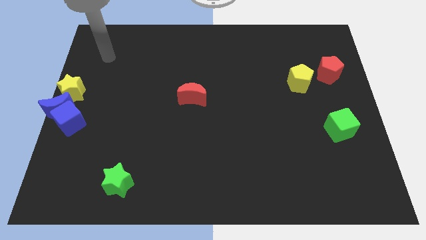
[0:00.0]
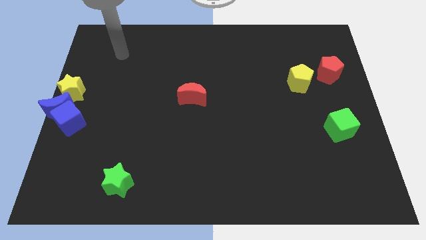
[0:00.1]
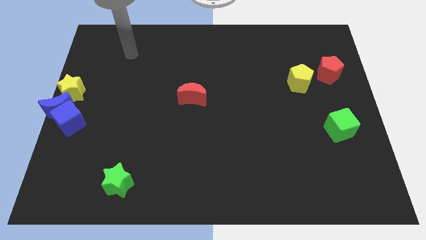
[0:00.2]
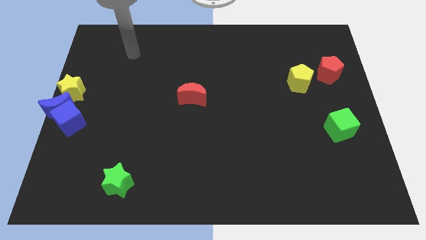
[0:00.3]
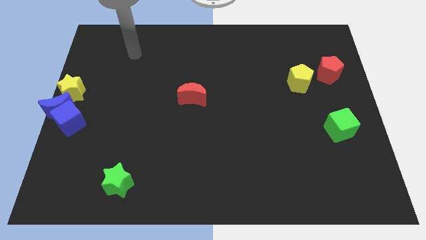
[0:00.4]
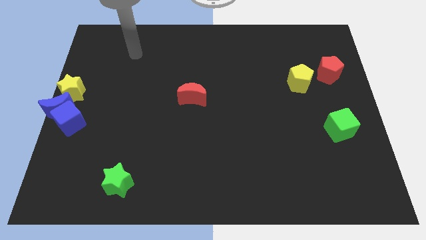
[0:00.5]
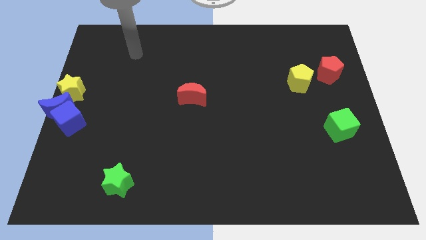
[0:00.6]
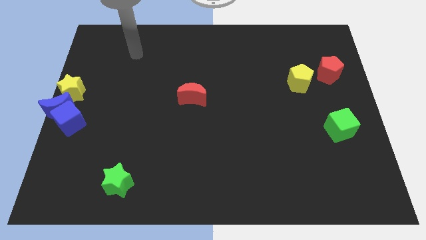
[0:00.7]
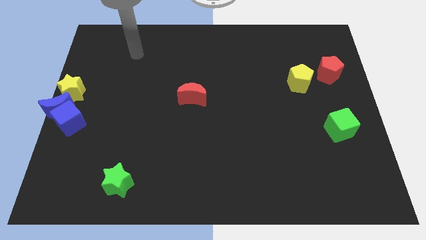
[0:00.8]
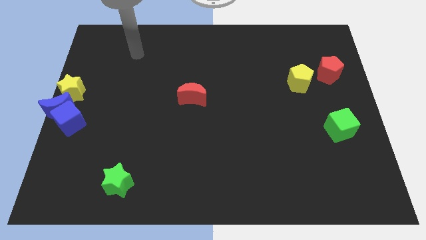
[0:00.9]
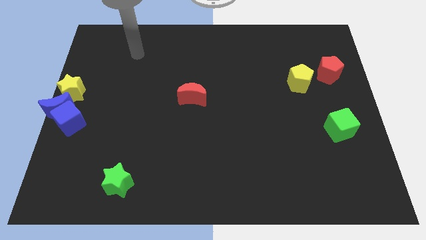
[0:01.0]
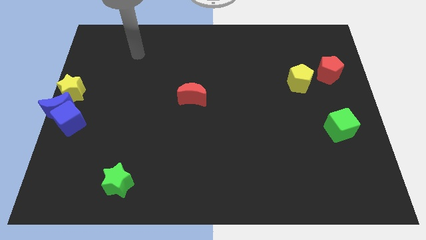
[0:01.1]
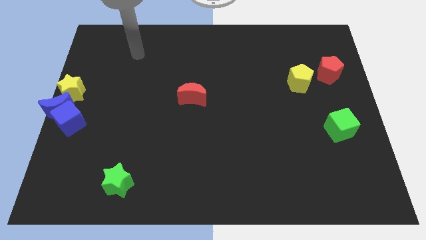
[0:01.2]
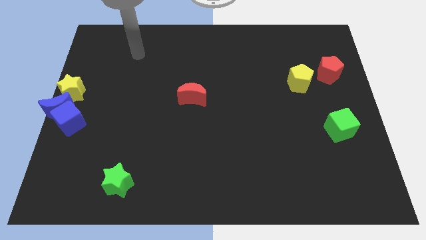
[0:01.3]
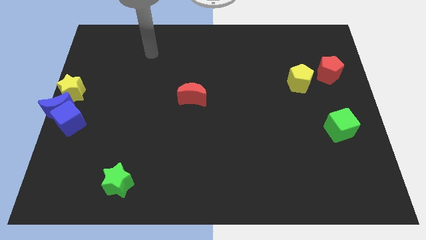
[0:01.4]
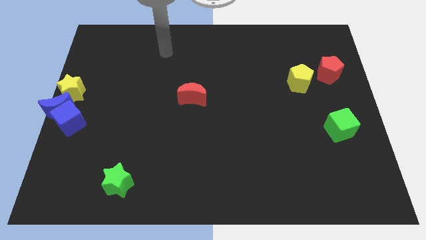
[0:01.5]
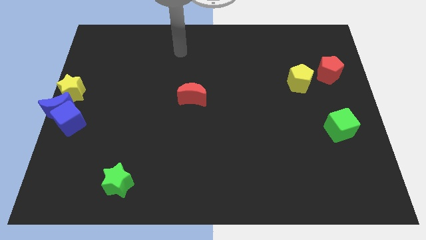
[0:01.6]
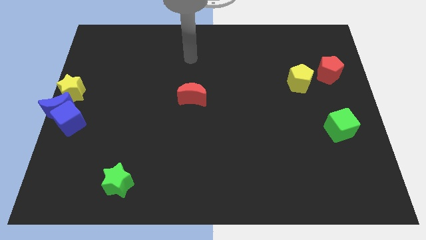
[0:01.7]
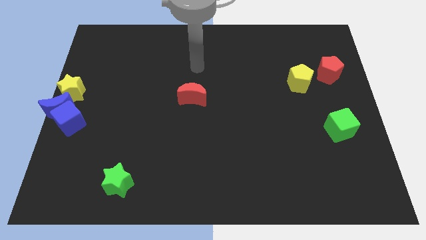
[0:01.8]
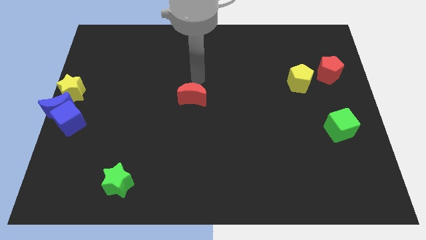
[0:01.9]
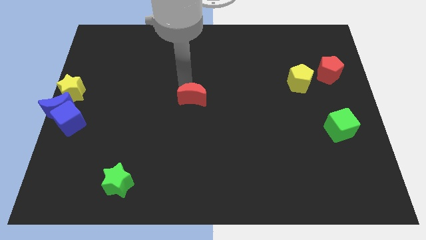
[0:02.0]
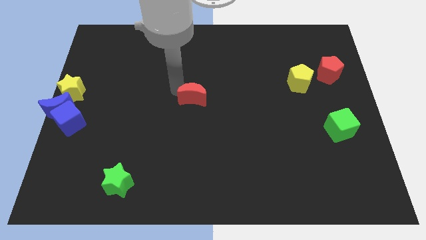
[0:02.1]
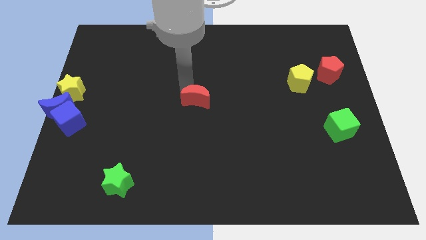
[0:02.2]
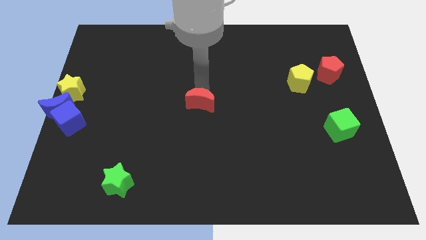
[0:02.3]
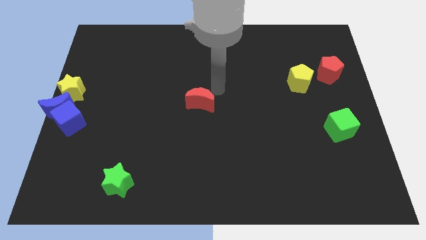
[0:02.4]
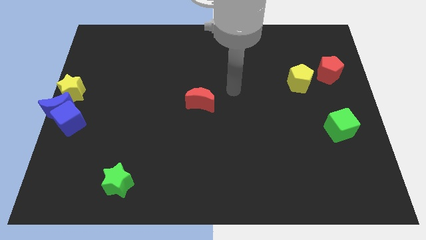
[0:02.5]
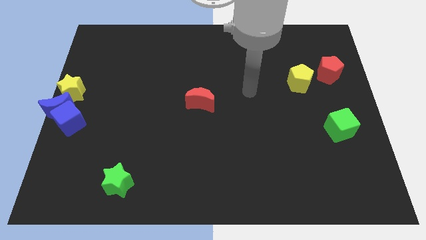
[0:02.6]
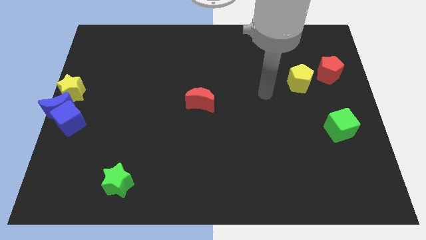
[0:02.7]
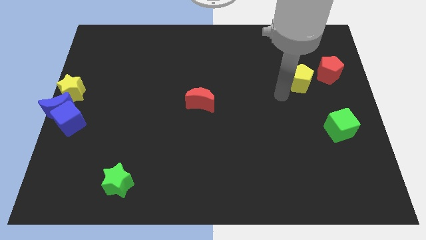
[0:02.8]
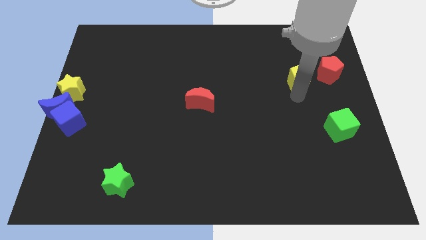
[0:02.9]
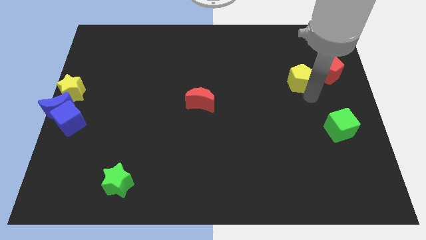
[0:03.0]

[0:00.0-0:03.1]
move arm left below the yellow star

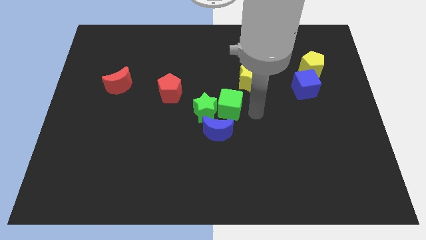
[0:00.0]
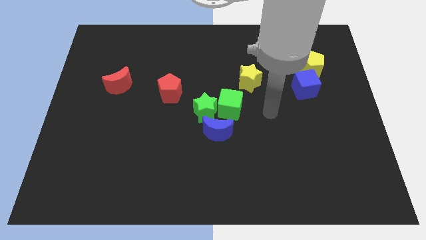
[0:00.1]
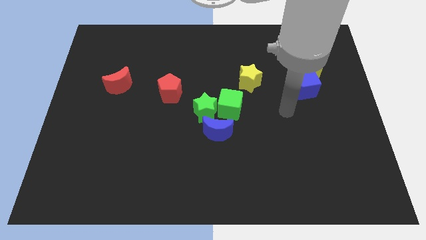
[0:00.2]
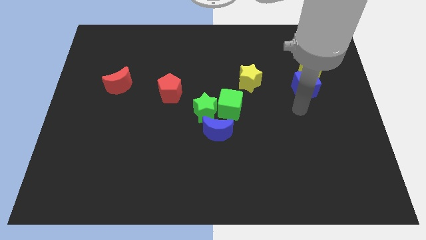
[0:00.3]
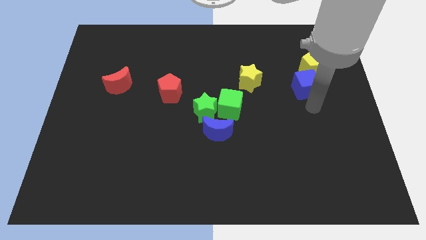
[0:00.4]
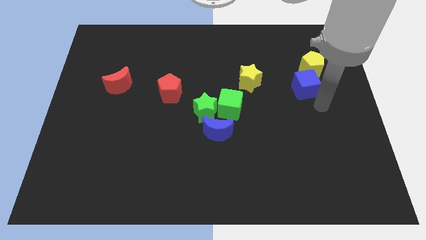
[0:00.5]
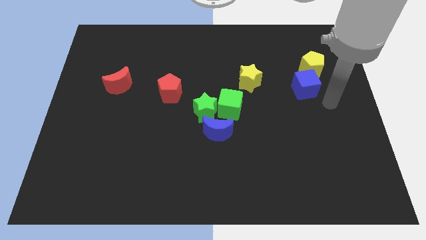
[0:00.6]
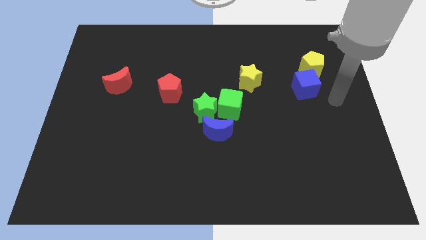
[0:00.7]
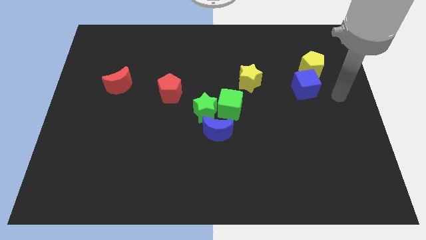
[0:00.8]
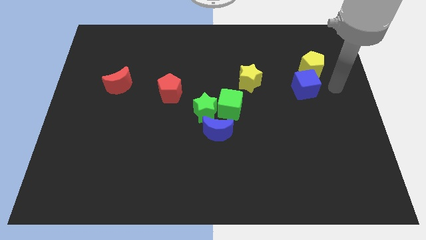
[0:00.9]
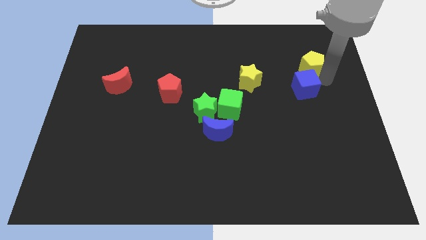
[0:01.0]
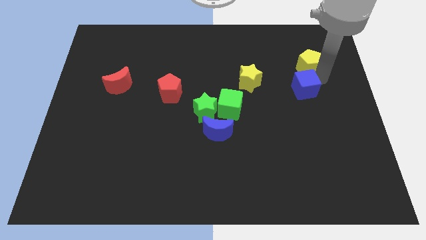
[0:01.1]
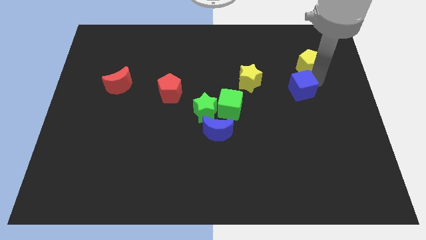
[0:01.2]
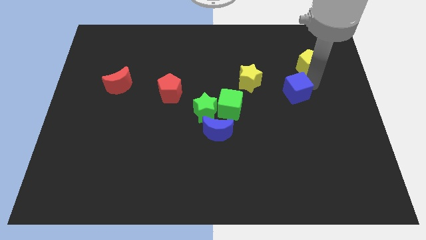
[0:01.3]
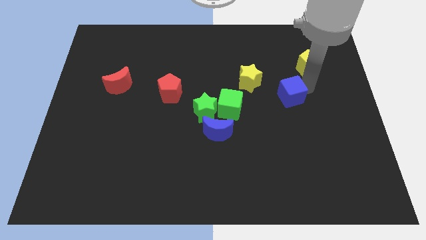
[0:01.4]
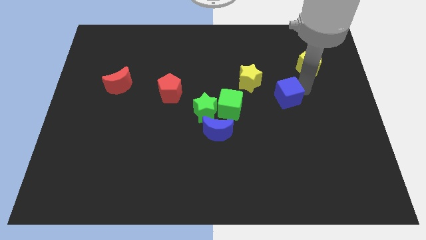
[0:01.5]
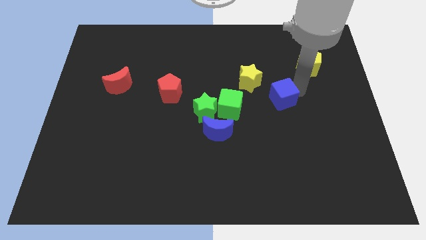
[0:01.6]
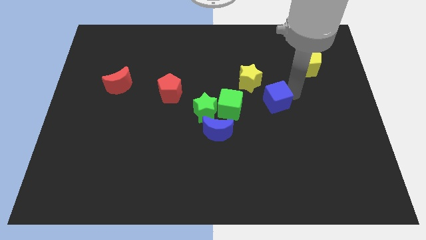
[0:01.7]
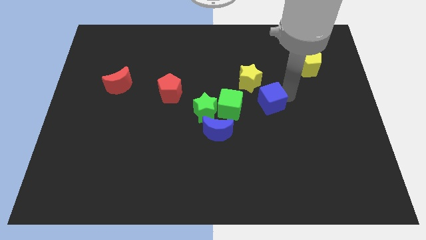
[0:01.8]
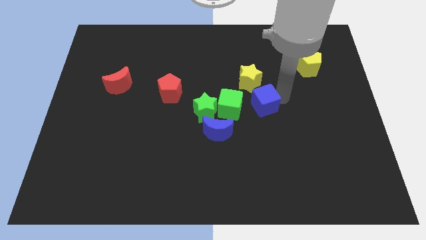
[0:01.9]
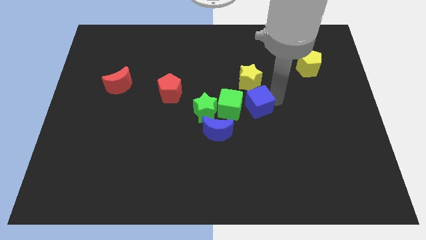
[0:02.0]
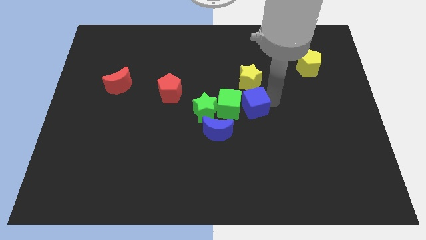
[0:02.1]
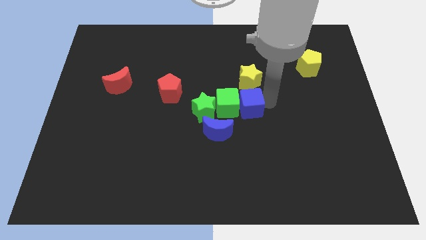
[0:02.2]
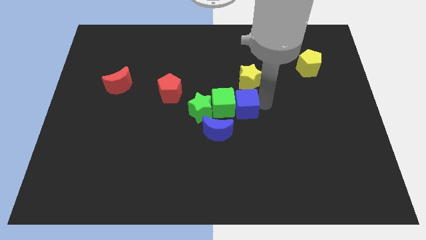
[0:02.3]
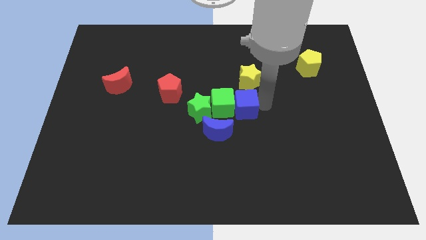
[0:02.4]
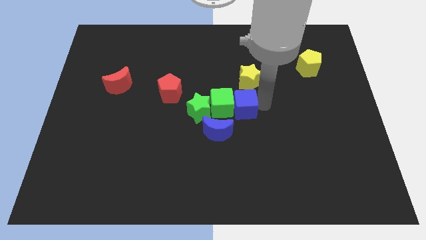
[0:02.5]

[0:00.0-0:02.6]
move the blue cube into the green cube

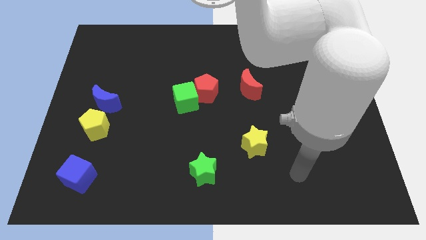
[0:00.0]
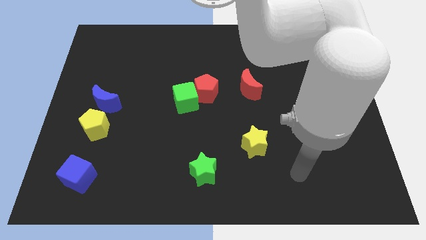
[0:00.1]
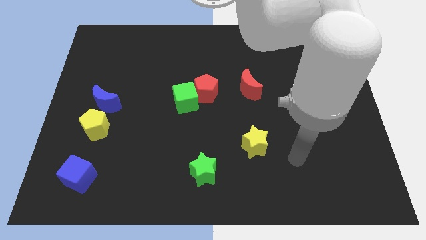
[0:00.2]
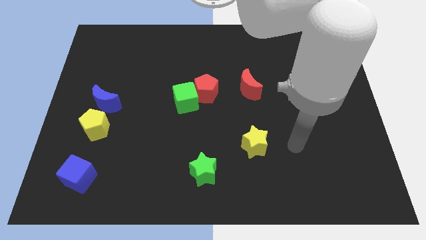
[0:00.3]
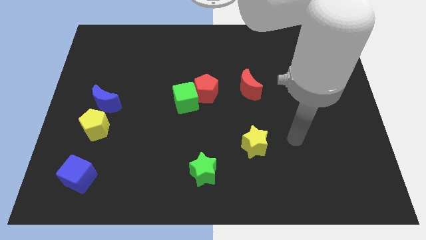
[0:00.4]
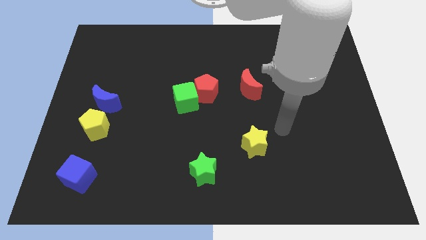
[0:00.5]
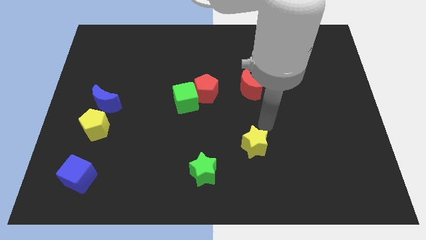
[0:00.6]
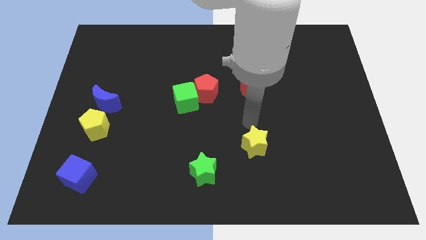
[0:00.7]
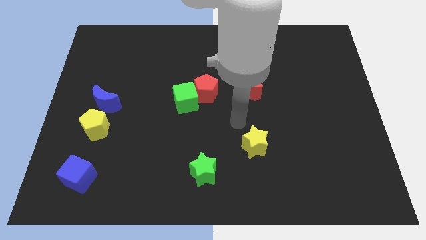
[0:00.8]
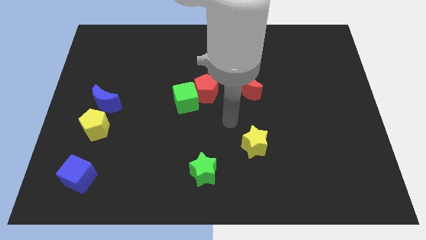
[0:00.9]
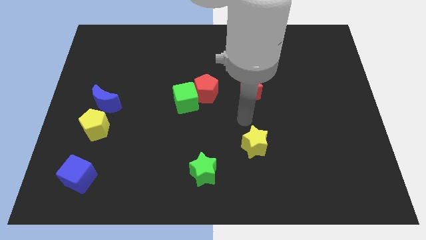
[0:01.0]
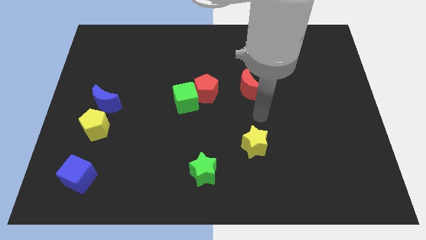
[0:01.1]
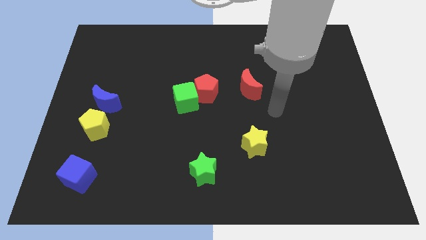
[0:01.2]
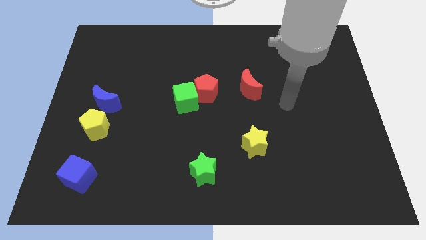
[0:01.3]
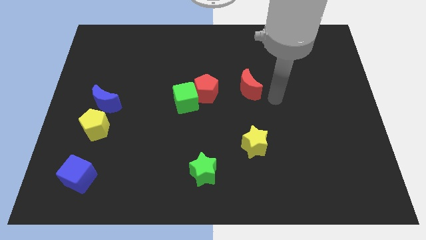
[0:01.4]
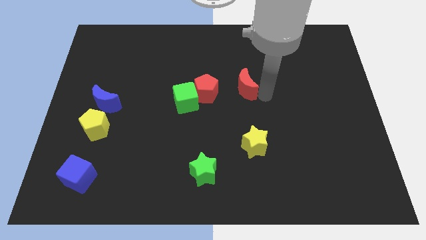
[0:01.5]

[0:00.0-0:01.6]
move your arm to the right of the red crescent

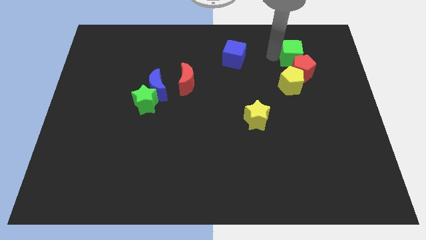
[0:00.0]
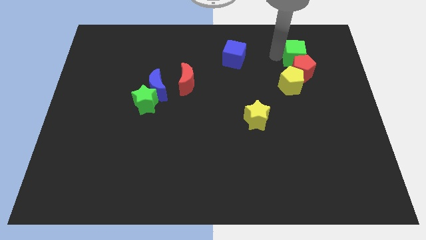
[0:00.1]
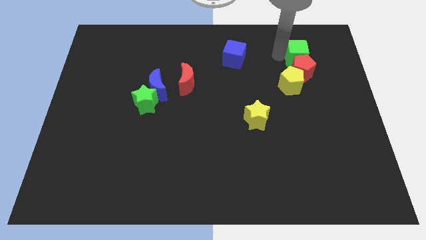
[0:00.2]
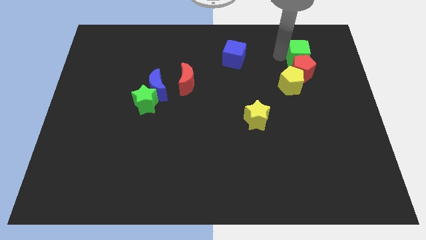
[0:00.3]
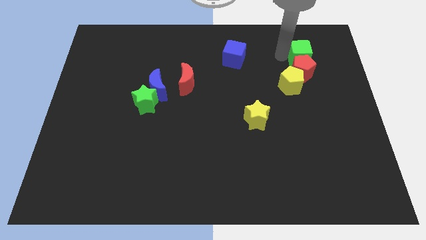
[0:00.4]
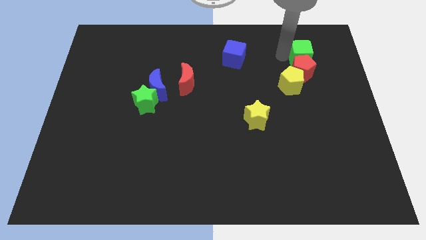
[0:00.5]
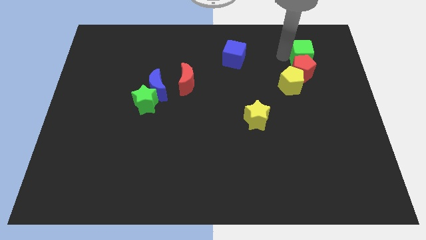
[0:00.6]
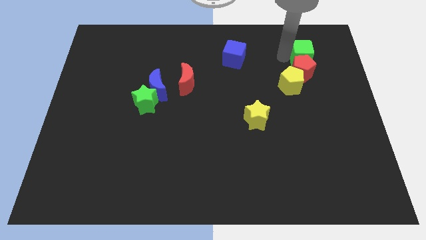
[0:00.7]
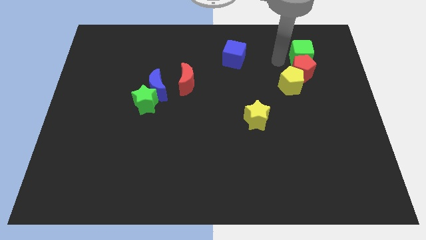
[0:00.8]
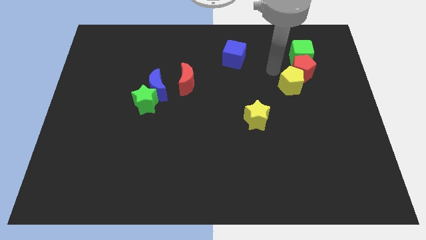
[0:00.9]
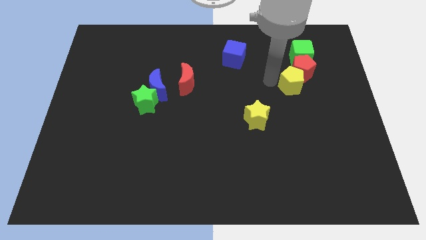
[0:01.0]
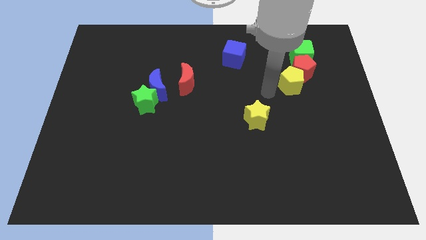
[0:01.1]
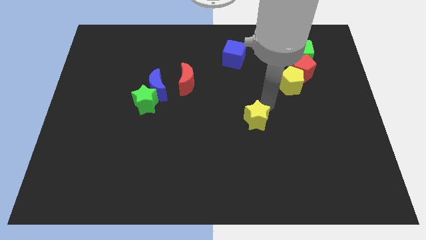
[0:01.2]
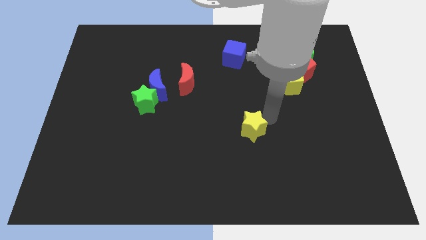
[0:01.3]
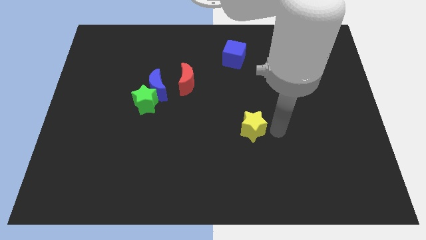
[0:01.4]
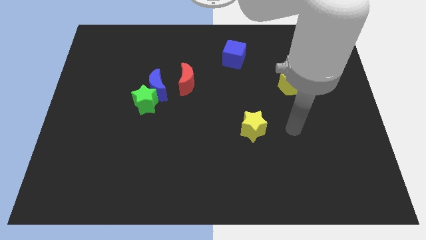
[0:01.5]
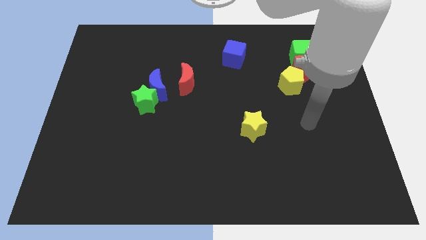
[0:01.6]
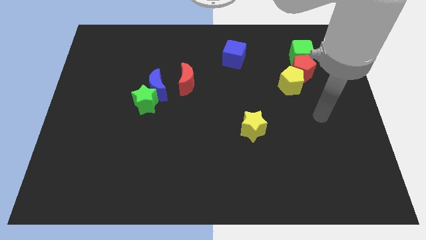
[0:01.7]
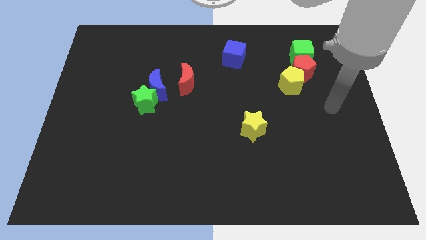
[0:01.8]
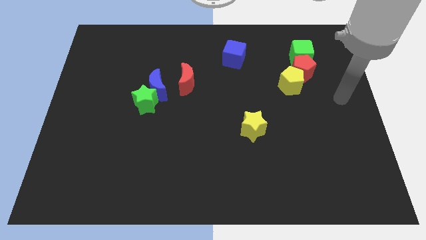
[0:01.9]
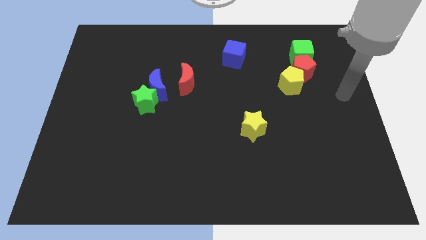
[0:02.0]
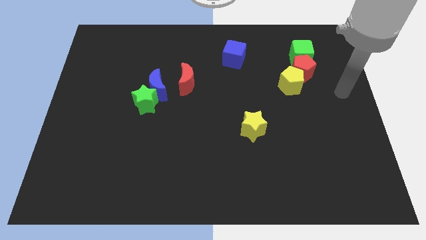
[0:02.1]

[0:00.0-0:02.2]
move yellow star slightly down
